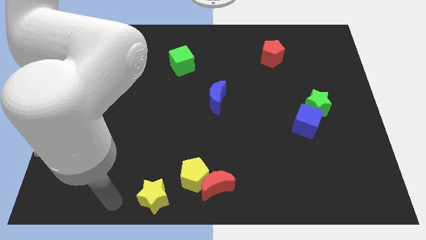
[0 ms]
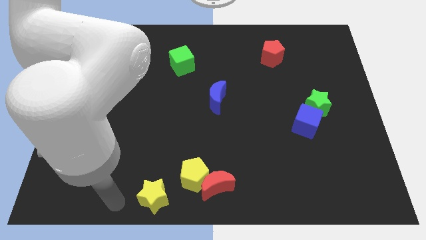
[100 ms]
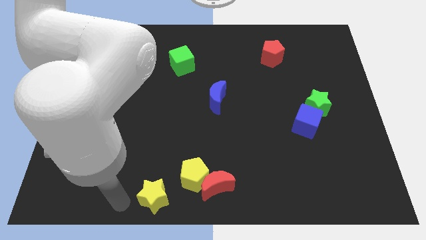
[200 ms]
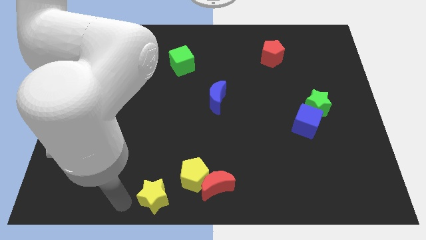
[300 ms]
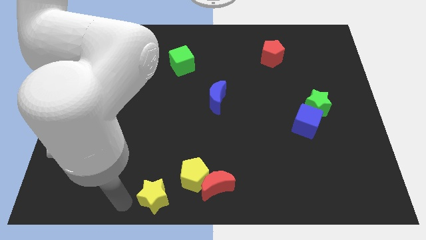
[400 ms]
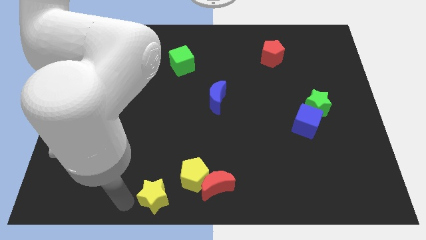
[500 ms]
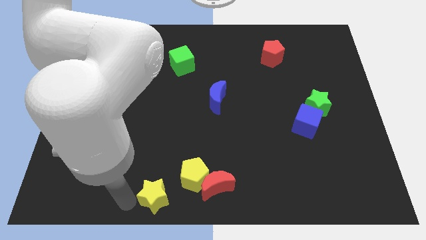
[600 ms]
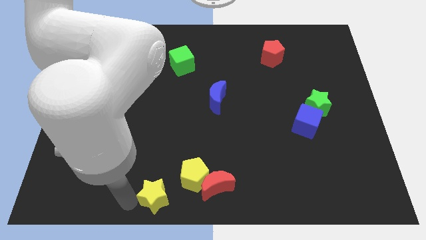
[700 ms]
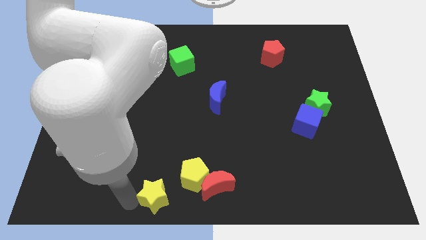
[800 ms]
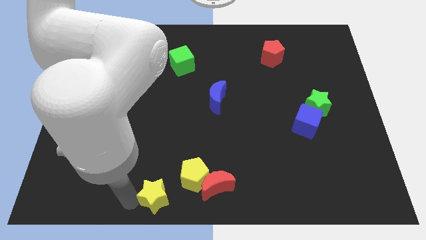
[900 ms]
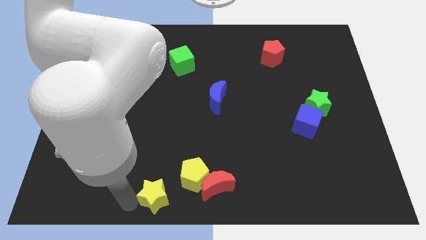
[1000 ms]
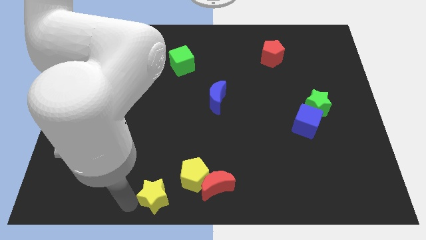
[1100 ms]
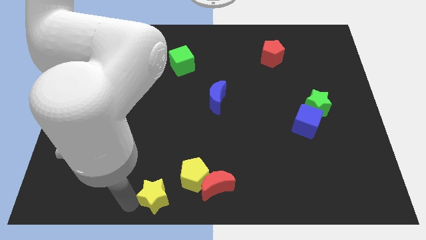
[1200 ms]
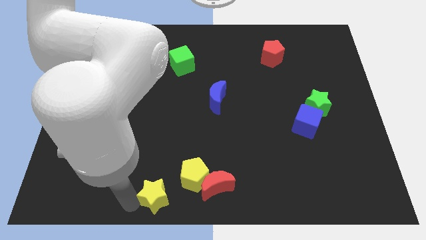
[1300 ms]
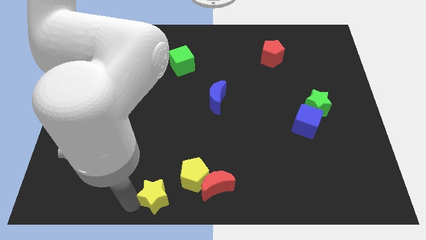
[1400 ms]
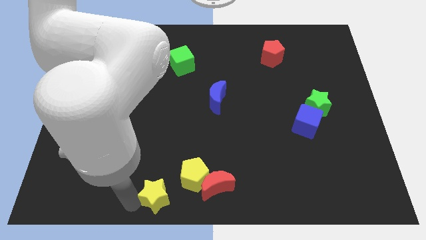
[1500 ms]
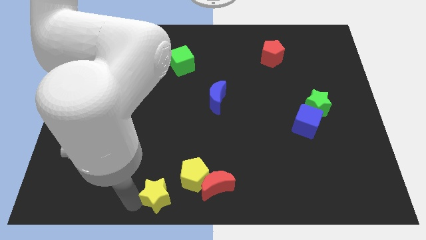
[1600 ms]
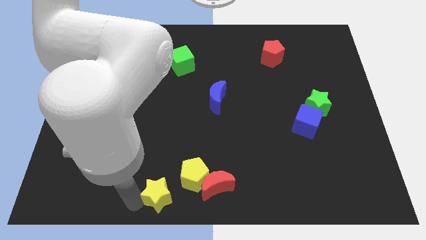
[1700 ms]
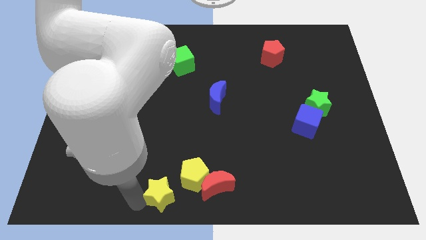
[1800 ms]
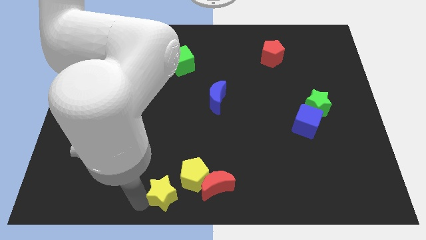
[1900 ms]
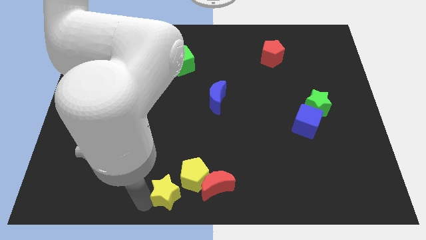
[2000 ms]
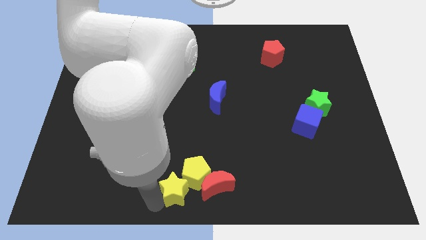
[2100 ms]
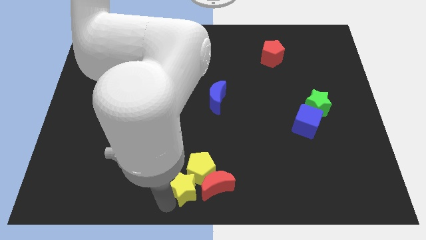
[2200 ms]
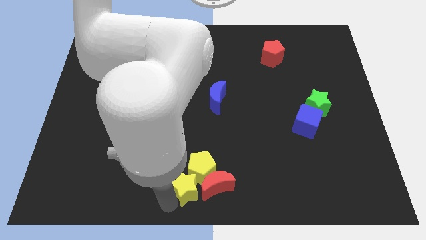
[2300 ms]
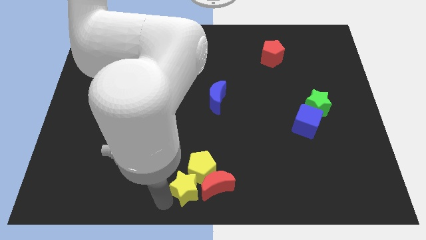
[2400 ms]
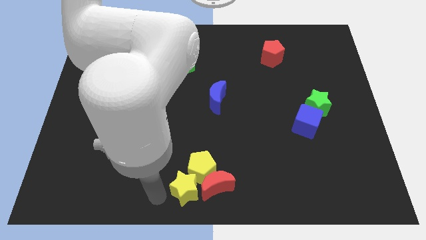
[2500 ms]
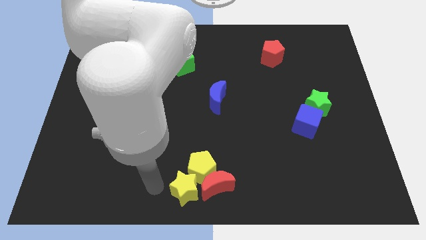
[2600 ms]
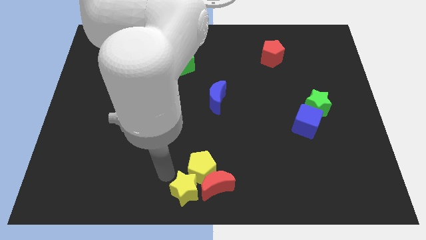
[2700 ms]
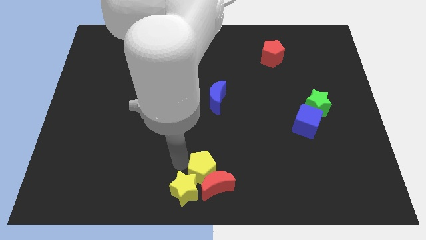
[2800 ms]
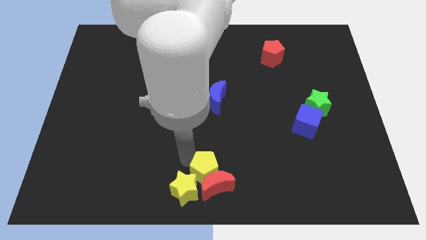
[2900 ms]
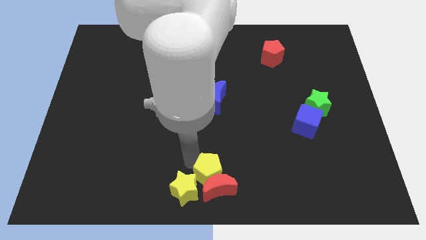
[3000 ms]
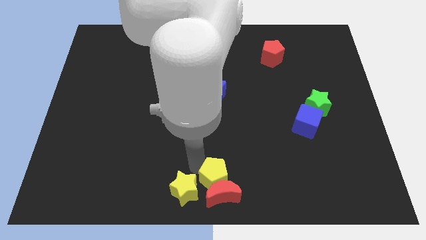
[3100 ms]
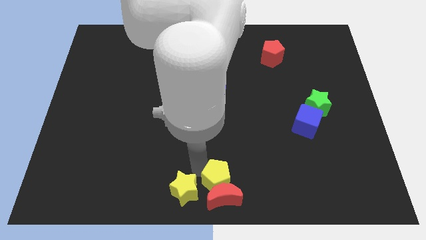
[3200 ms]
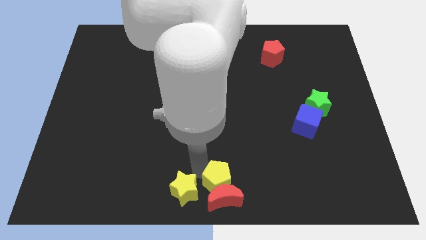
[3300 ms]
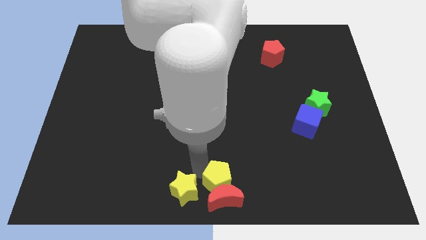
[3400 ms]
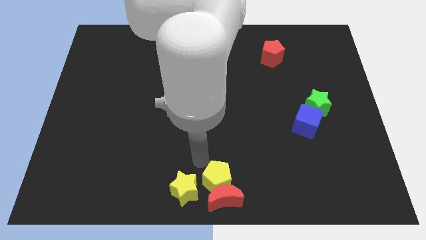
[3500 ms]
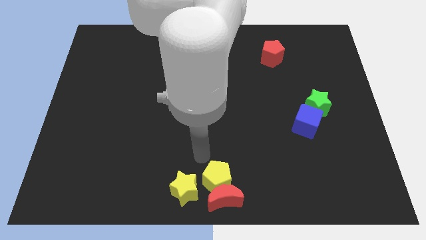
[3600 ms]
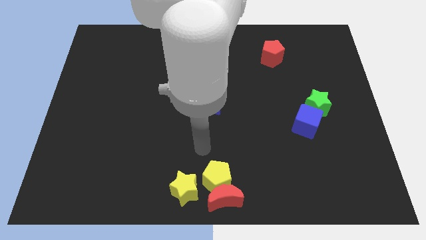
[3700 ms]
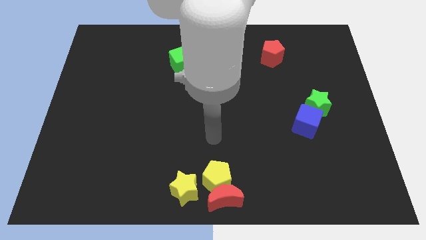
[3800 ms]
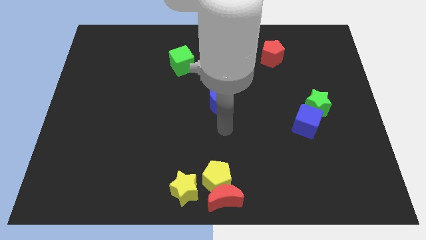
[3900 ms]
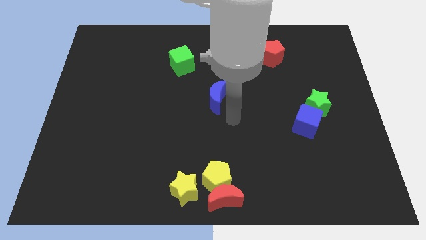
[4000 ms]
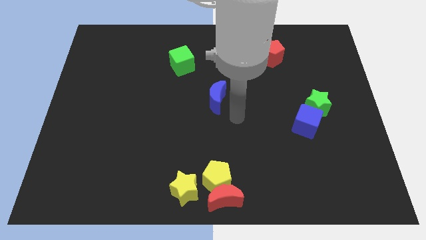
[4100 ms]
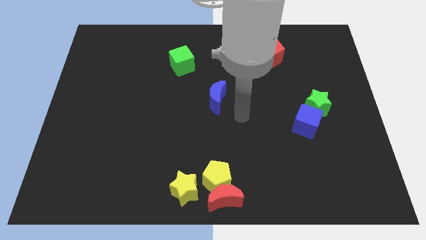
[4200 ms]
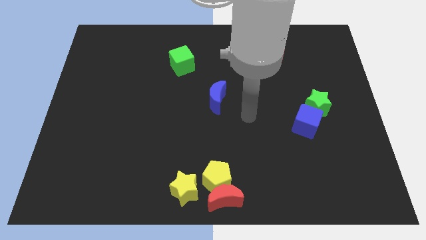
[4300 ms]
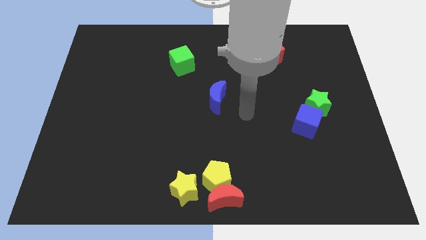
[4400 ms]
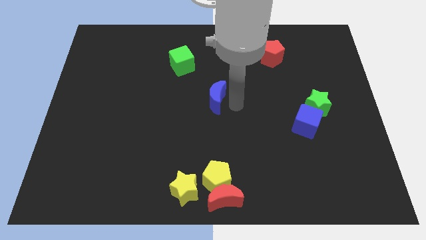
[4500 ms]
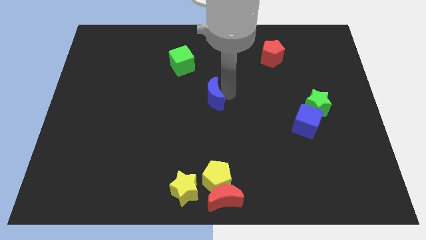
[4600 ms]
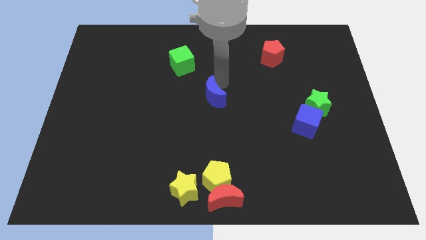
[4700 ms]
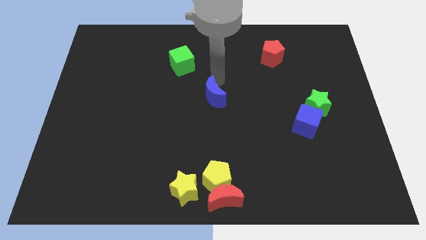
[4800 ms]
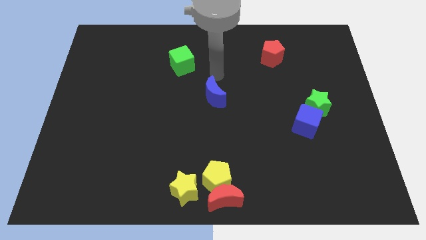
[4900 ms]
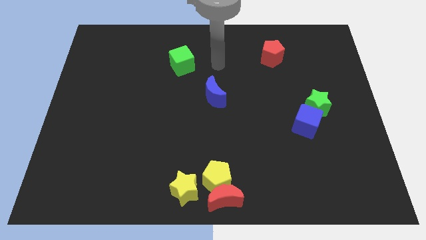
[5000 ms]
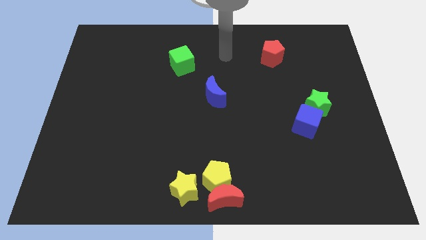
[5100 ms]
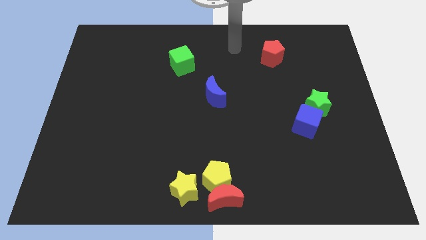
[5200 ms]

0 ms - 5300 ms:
push the yellow star into the yellow pentagon on the bottom center

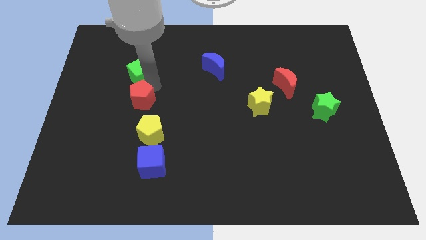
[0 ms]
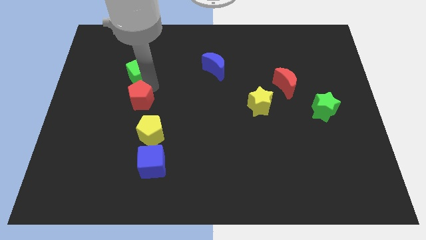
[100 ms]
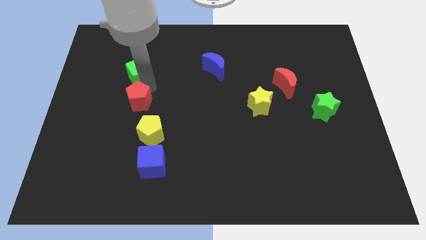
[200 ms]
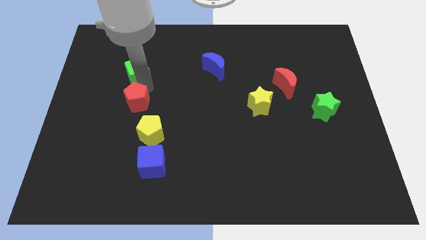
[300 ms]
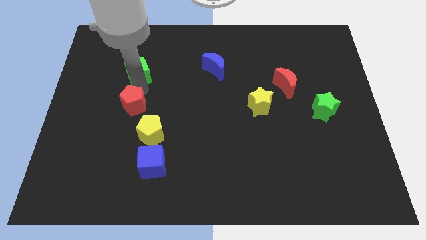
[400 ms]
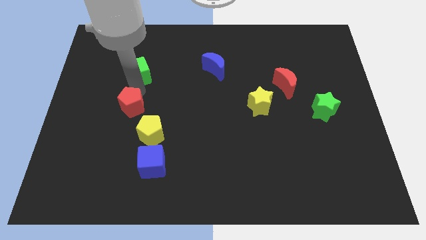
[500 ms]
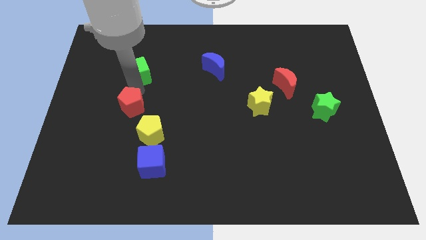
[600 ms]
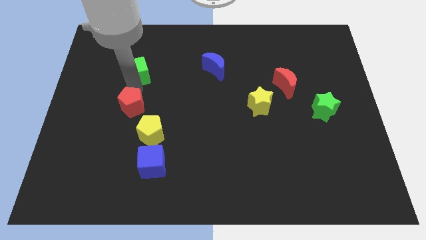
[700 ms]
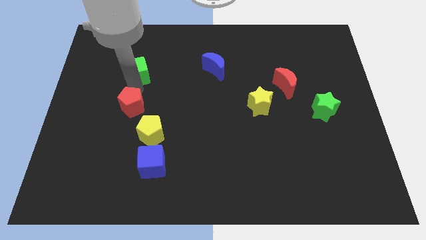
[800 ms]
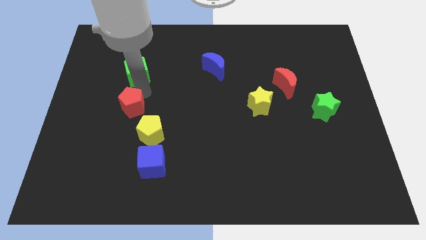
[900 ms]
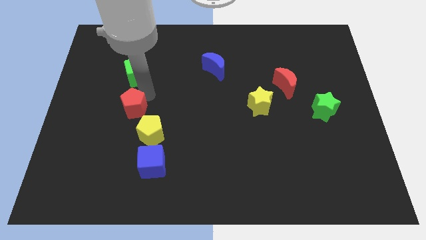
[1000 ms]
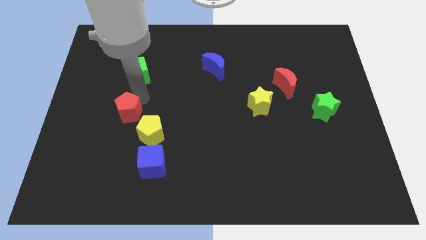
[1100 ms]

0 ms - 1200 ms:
separate the red pentagon and green cube

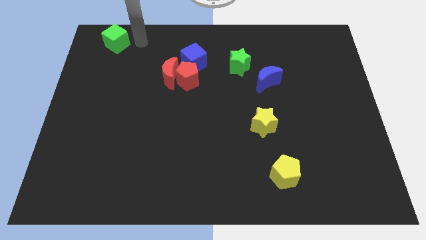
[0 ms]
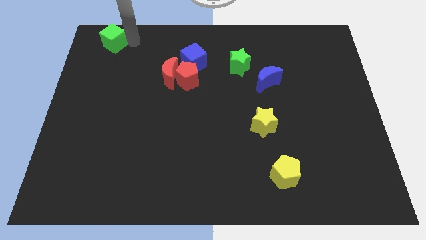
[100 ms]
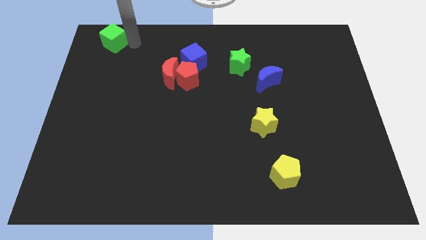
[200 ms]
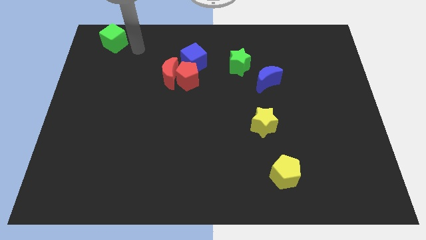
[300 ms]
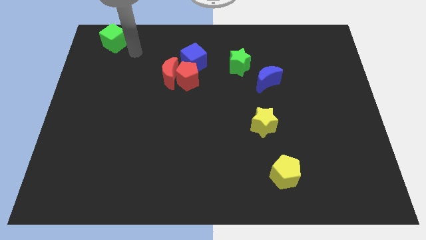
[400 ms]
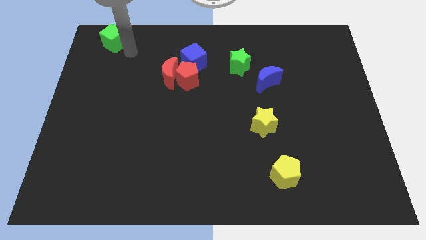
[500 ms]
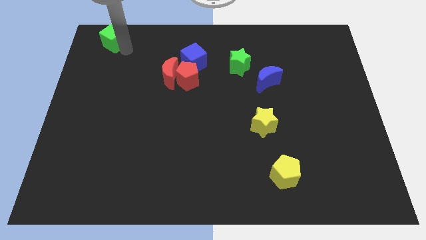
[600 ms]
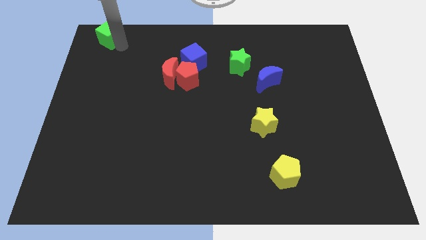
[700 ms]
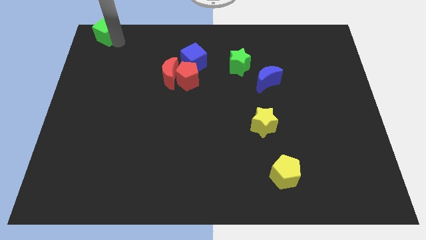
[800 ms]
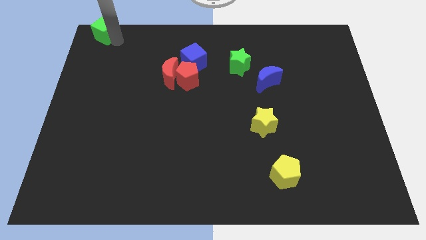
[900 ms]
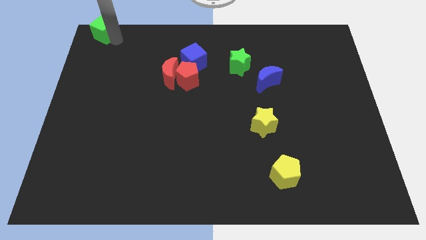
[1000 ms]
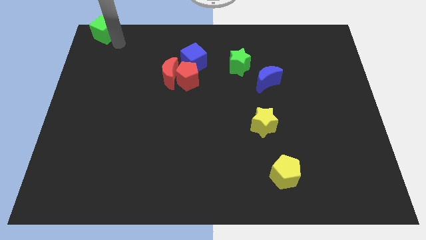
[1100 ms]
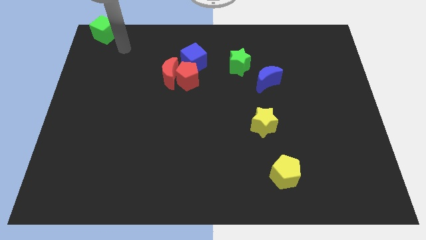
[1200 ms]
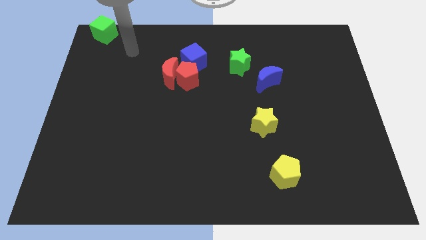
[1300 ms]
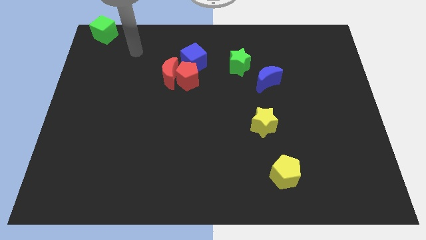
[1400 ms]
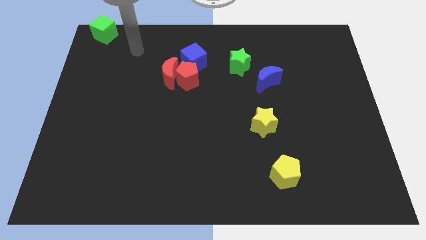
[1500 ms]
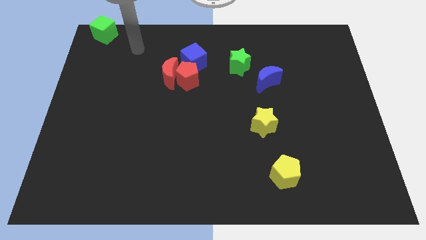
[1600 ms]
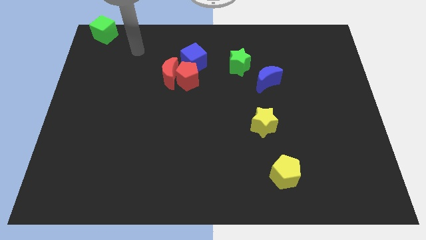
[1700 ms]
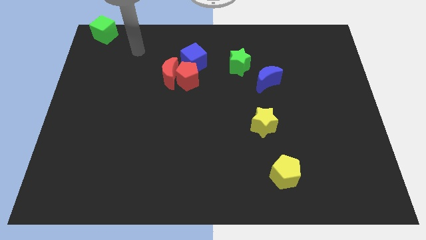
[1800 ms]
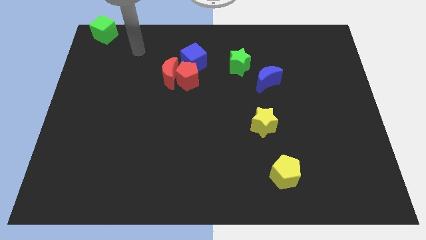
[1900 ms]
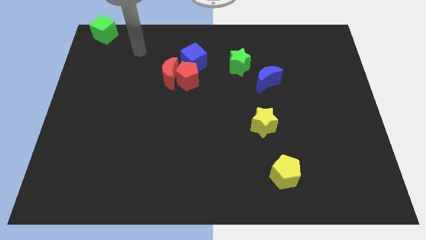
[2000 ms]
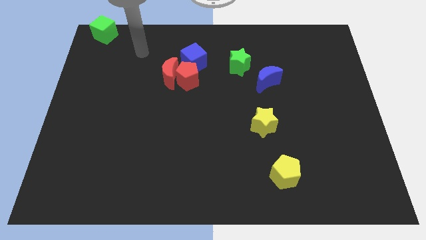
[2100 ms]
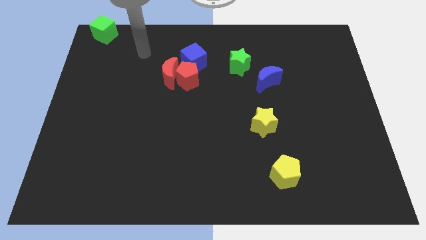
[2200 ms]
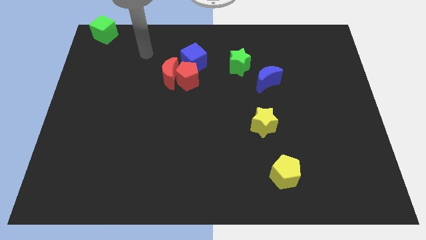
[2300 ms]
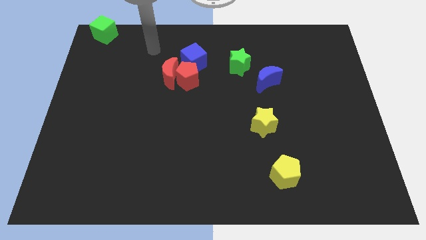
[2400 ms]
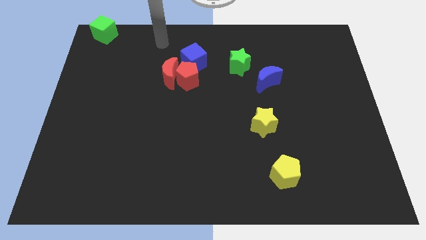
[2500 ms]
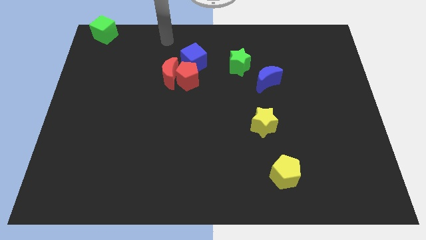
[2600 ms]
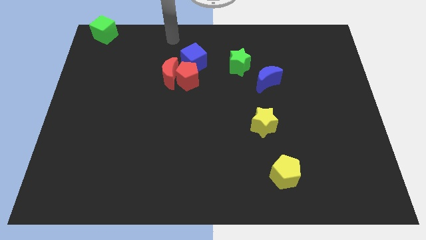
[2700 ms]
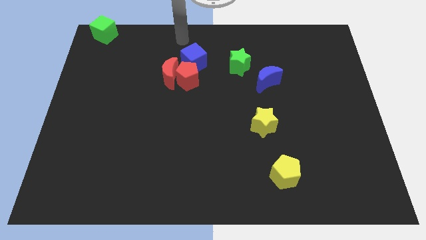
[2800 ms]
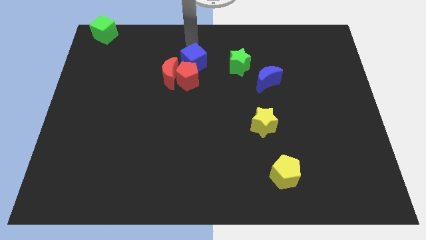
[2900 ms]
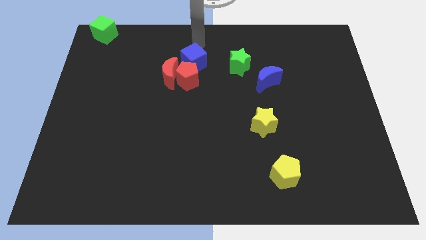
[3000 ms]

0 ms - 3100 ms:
place the green cube to the left top corner diagonally to the red crescent
